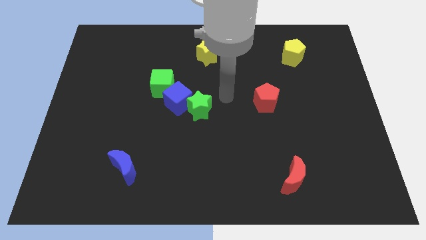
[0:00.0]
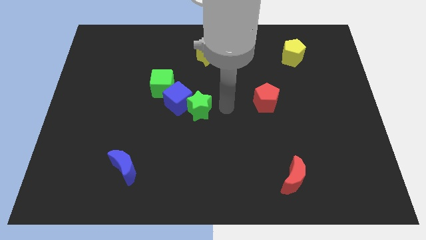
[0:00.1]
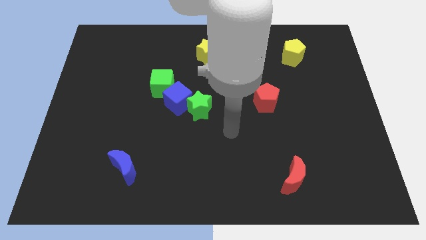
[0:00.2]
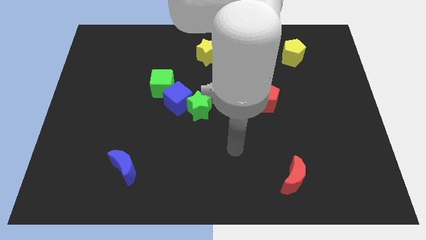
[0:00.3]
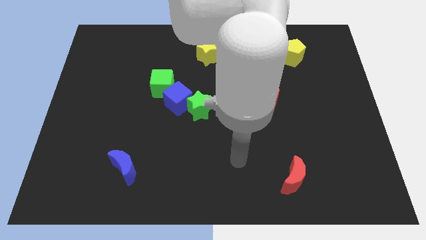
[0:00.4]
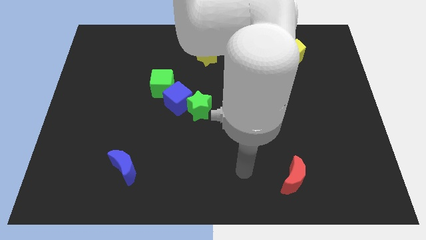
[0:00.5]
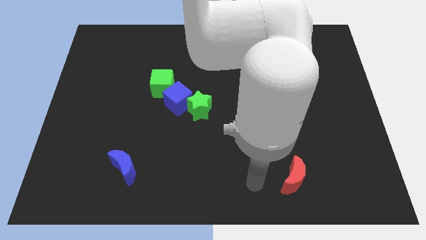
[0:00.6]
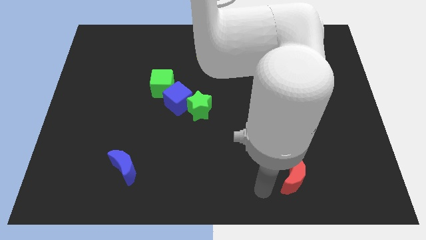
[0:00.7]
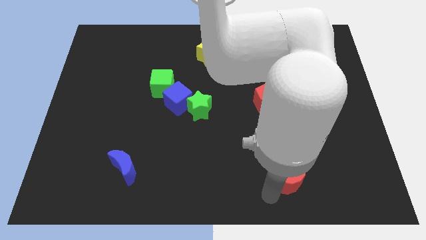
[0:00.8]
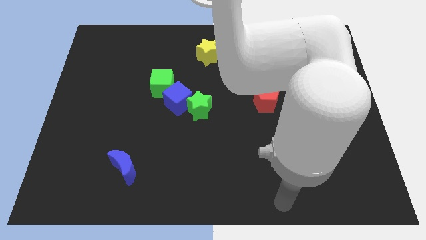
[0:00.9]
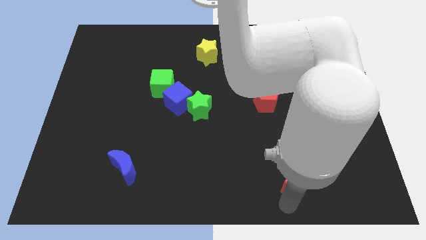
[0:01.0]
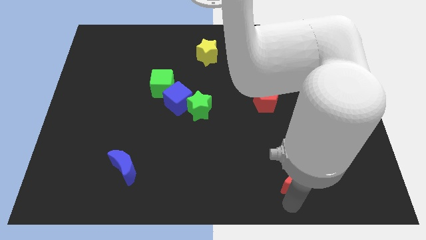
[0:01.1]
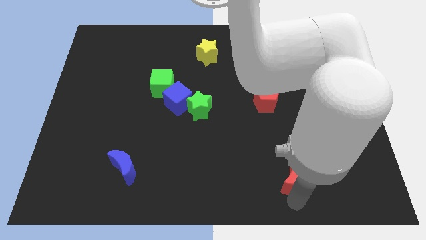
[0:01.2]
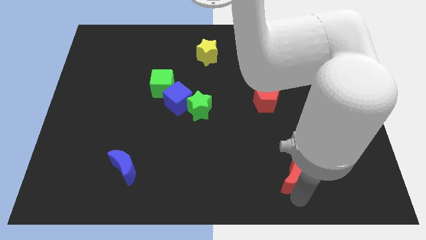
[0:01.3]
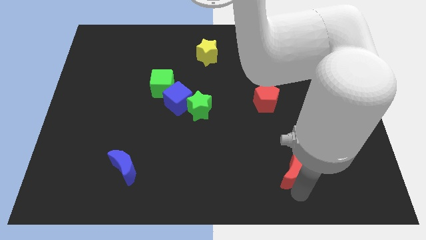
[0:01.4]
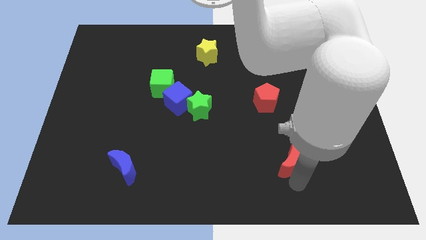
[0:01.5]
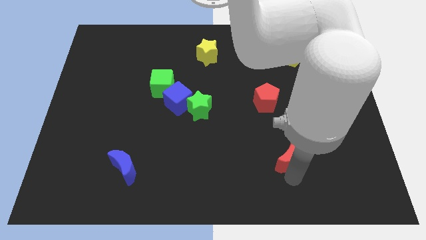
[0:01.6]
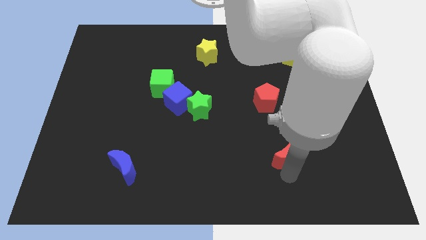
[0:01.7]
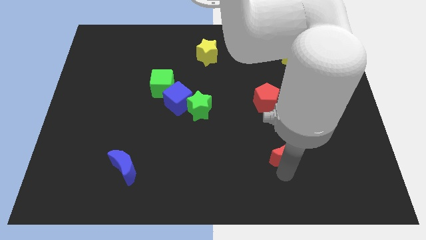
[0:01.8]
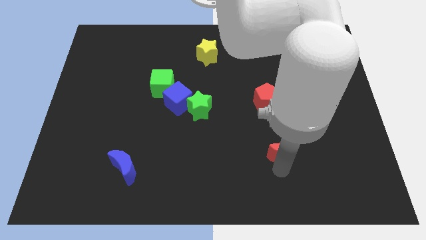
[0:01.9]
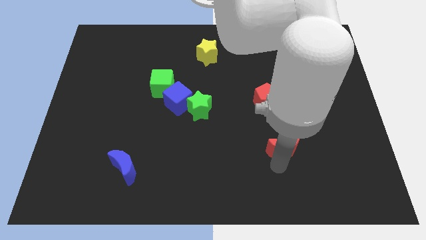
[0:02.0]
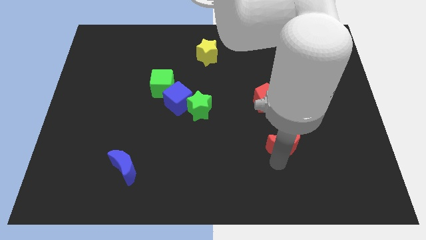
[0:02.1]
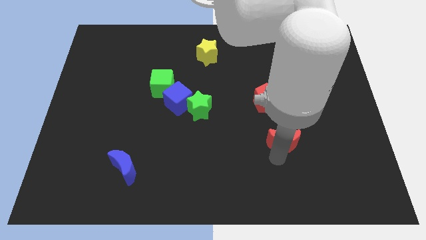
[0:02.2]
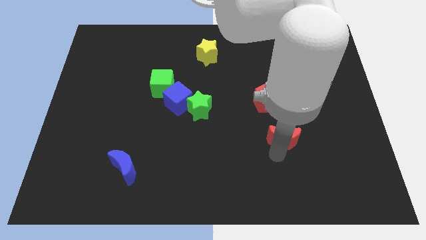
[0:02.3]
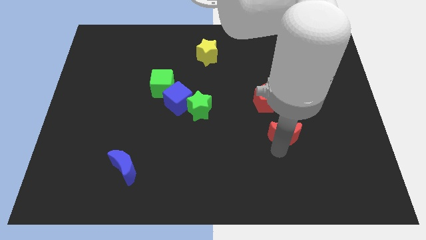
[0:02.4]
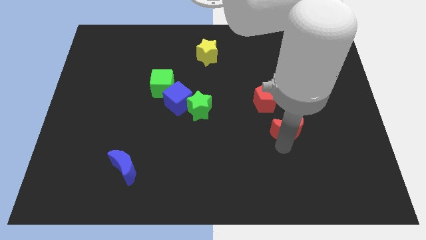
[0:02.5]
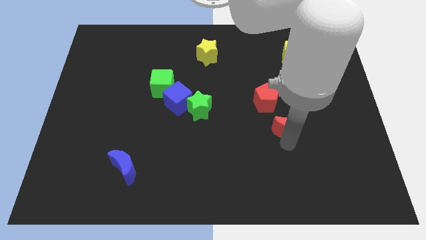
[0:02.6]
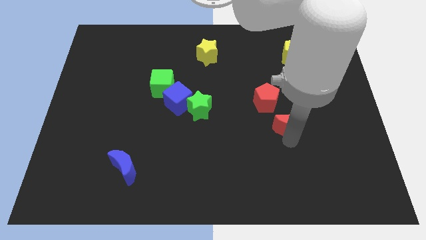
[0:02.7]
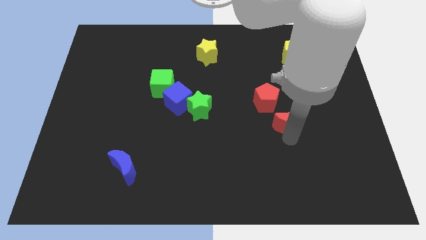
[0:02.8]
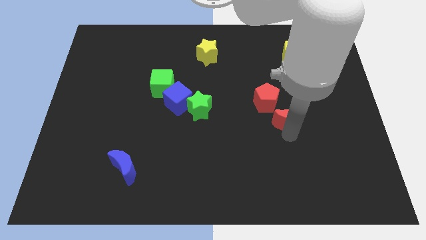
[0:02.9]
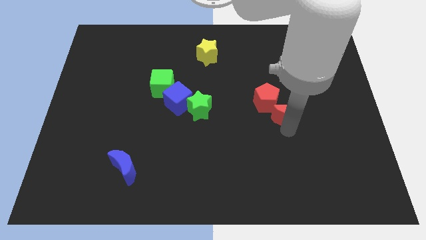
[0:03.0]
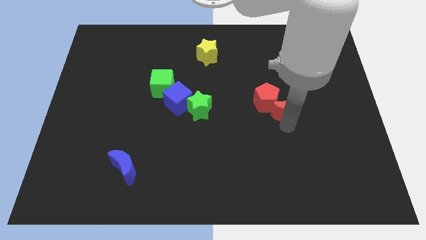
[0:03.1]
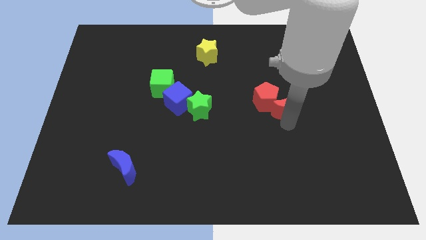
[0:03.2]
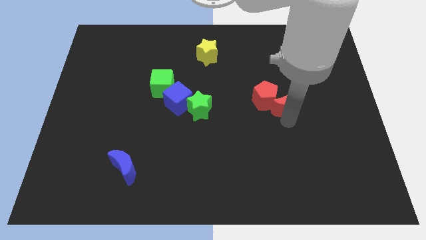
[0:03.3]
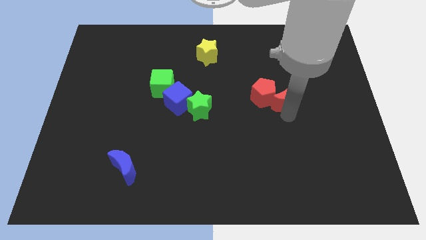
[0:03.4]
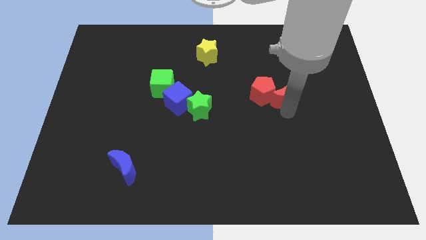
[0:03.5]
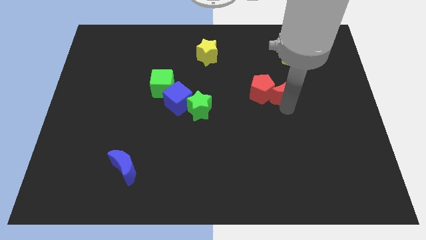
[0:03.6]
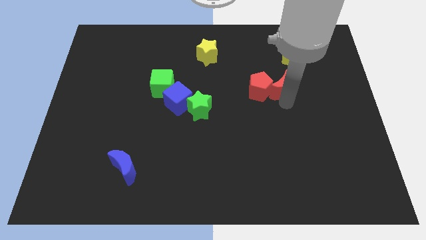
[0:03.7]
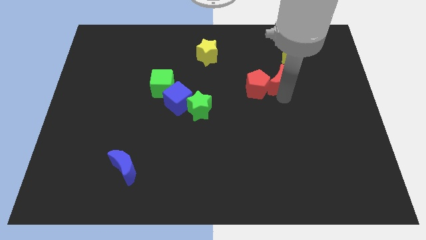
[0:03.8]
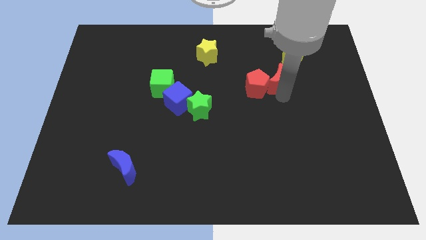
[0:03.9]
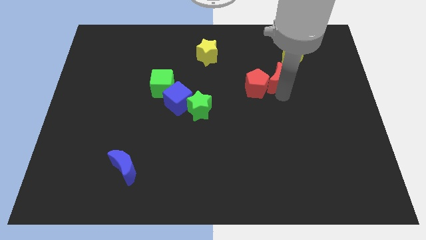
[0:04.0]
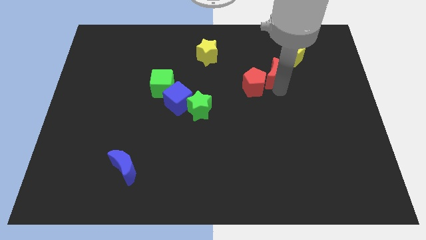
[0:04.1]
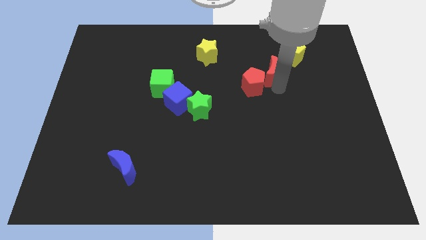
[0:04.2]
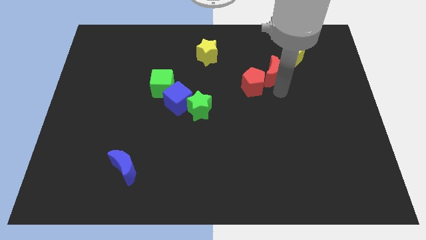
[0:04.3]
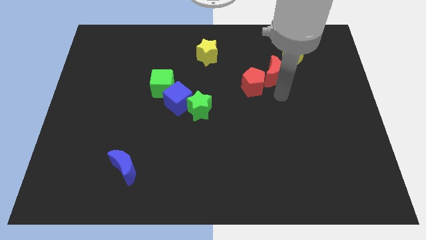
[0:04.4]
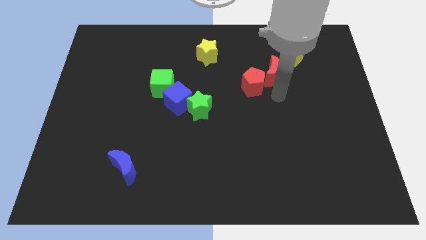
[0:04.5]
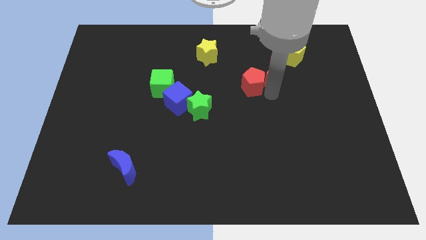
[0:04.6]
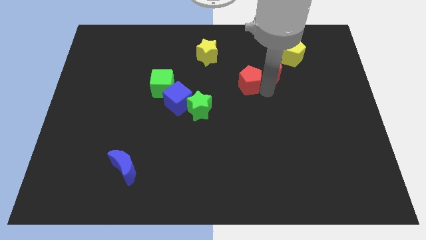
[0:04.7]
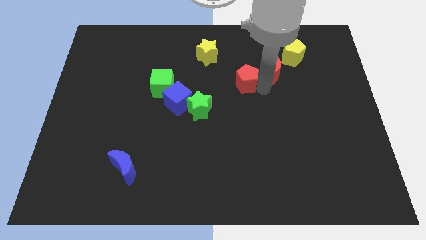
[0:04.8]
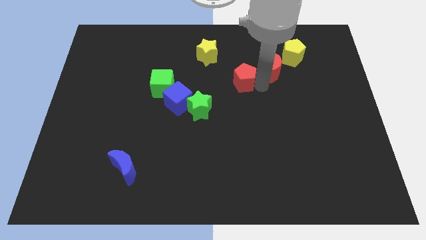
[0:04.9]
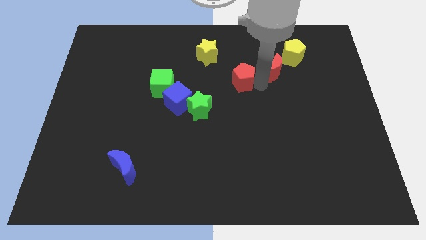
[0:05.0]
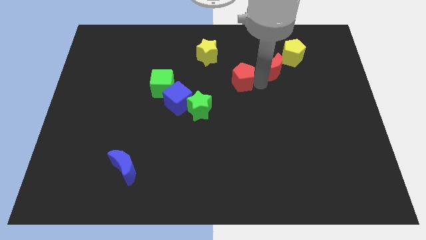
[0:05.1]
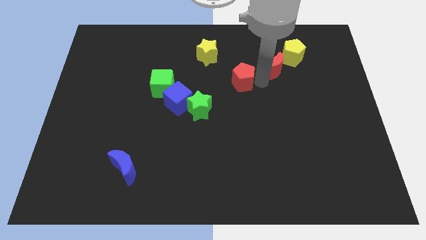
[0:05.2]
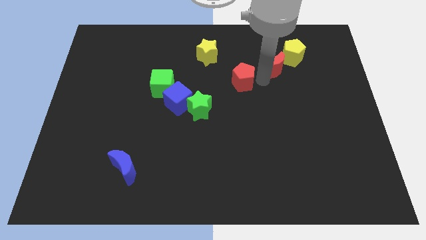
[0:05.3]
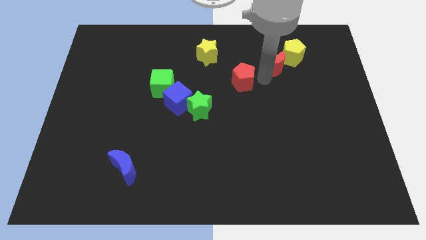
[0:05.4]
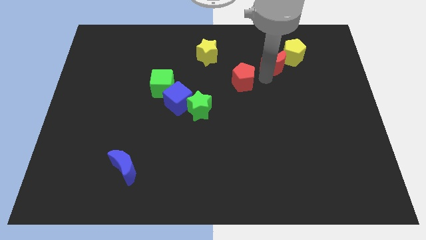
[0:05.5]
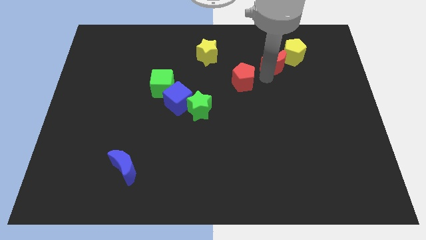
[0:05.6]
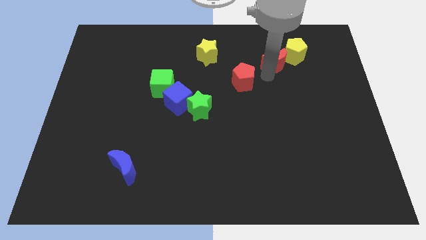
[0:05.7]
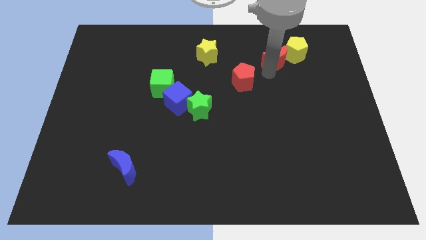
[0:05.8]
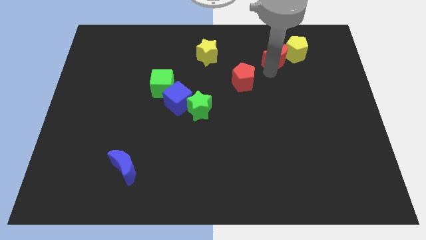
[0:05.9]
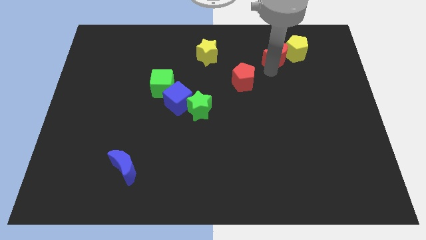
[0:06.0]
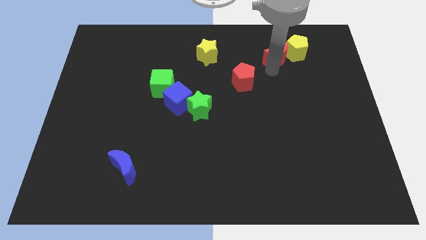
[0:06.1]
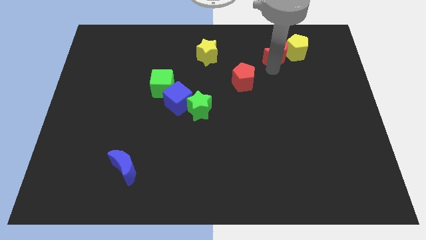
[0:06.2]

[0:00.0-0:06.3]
slide the red moon close to the yellow pentagon

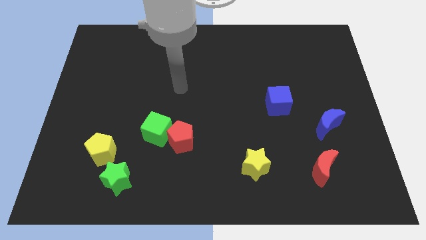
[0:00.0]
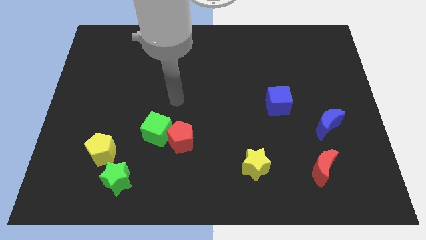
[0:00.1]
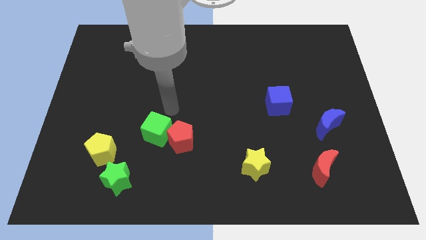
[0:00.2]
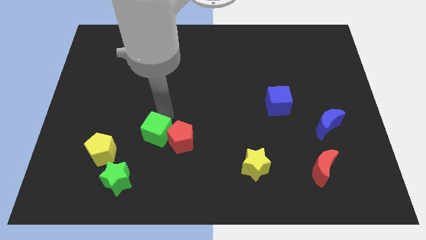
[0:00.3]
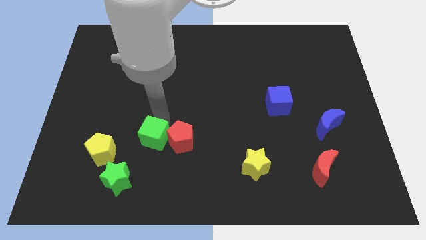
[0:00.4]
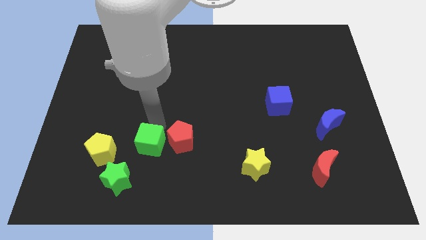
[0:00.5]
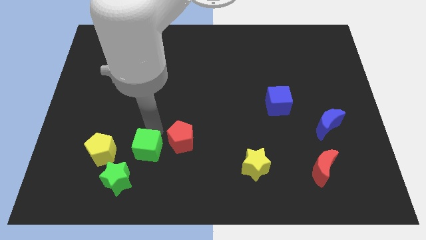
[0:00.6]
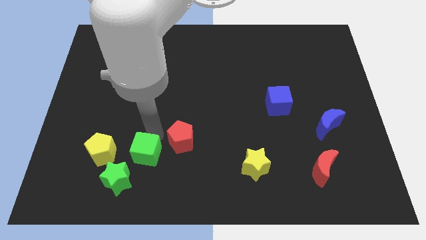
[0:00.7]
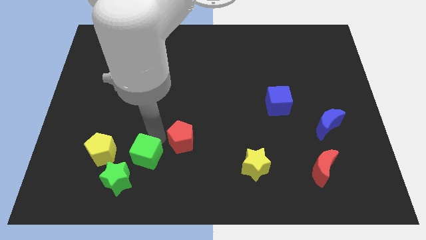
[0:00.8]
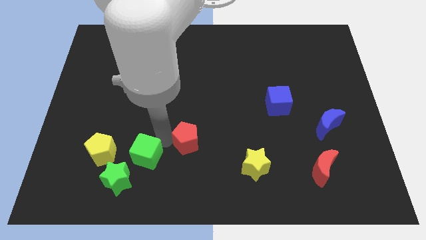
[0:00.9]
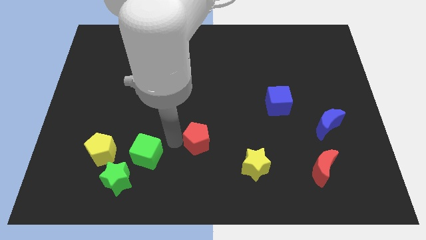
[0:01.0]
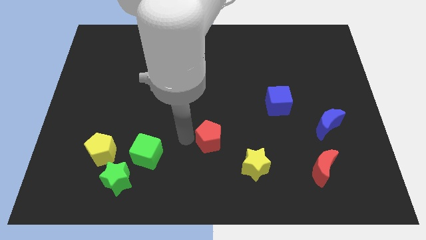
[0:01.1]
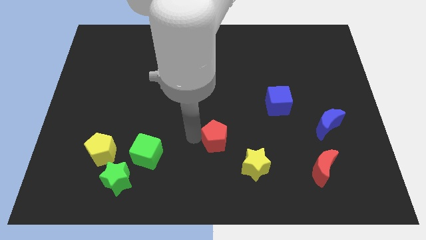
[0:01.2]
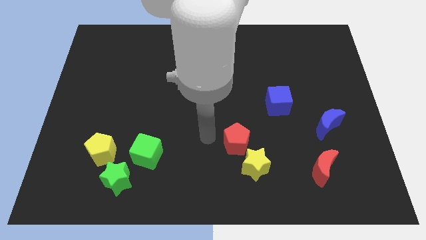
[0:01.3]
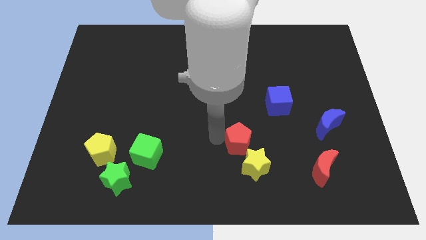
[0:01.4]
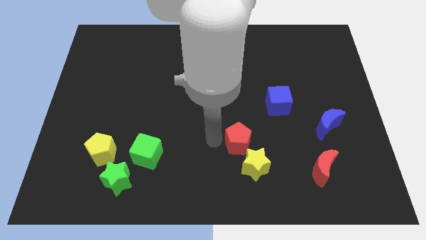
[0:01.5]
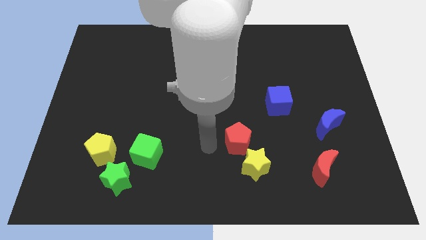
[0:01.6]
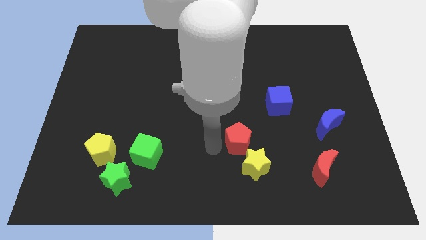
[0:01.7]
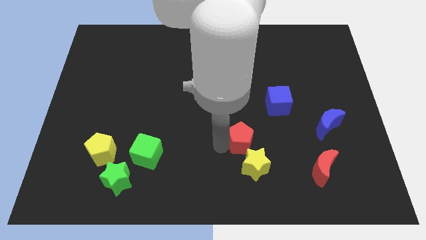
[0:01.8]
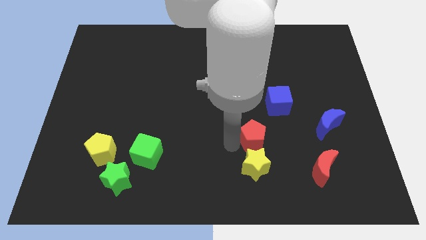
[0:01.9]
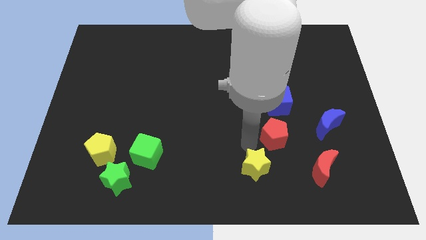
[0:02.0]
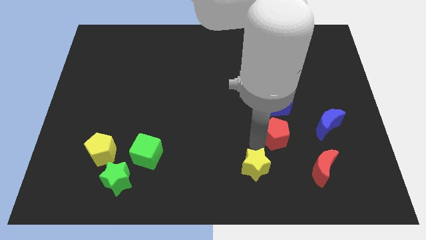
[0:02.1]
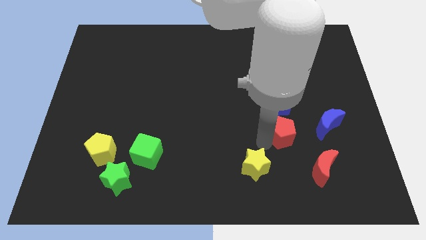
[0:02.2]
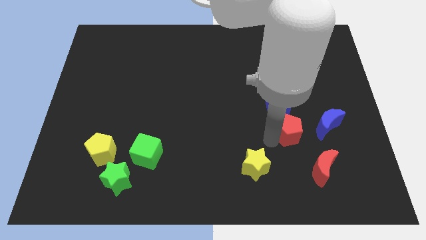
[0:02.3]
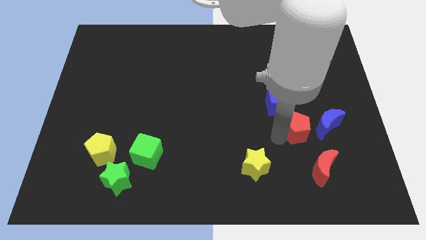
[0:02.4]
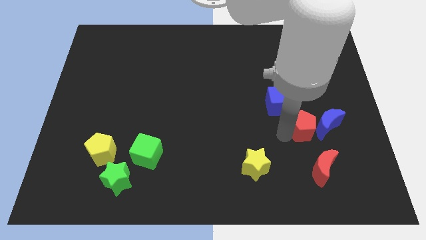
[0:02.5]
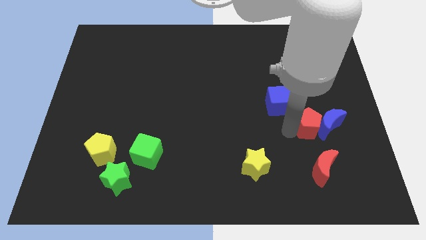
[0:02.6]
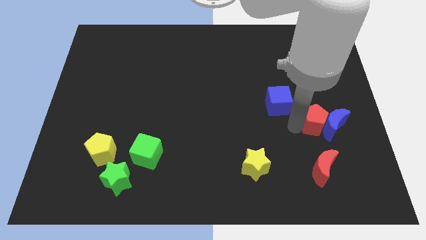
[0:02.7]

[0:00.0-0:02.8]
move the red pentagon close to the blue moon
